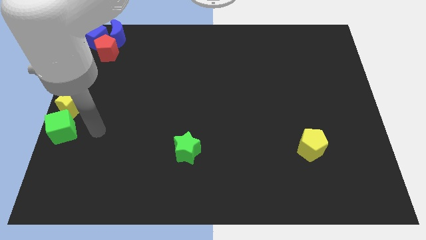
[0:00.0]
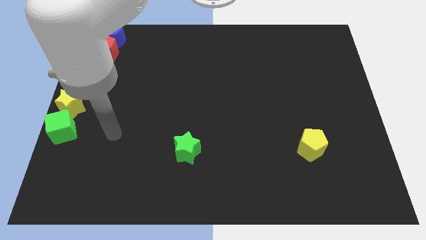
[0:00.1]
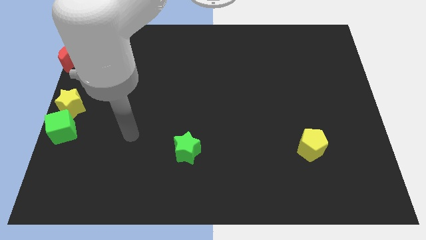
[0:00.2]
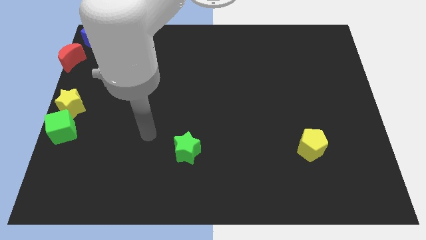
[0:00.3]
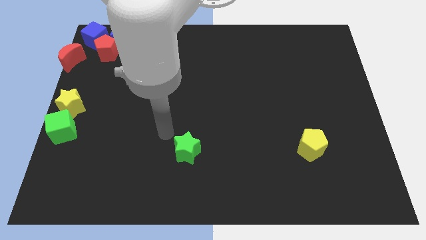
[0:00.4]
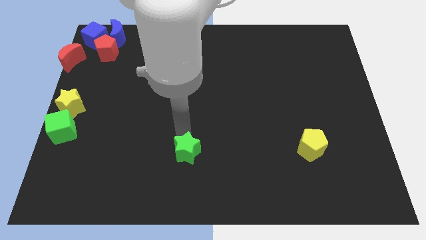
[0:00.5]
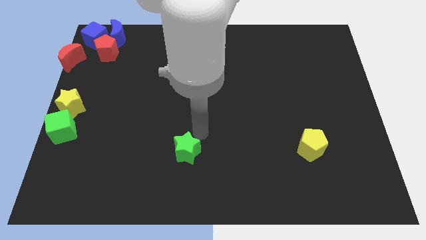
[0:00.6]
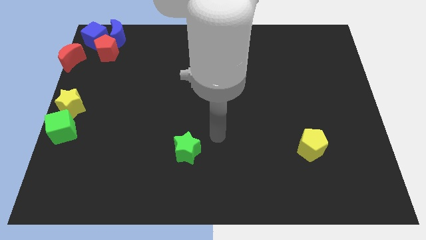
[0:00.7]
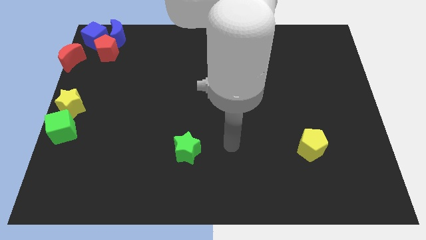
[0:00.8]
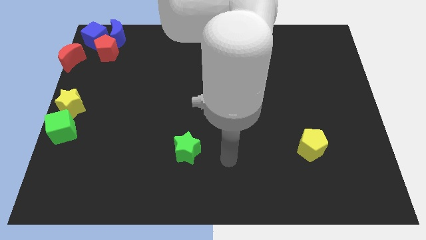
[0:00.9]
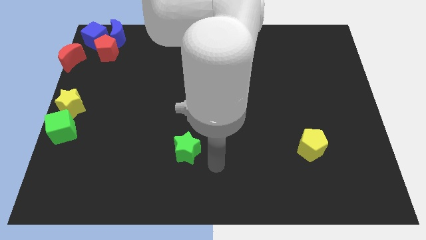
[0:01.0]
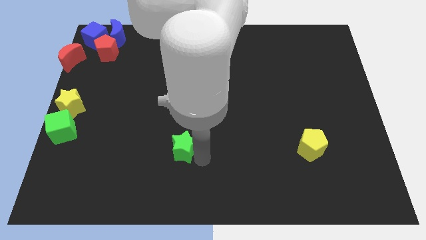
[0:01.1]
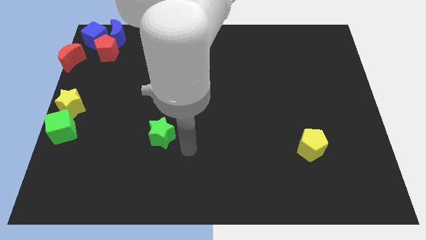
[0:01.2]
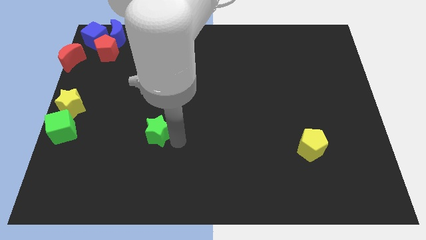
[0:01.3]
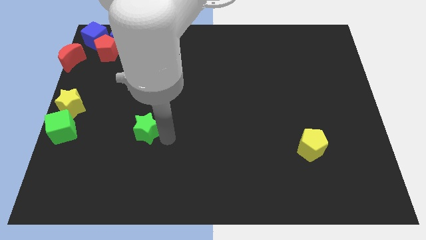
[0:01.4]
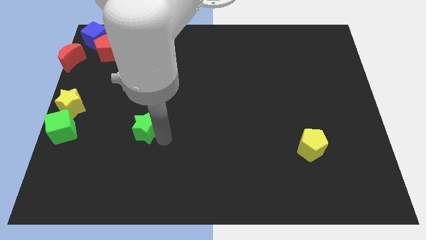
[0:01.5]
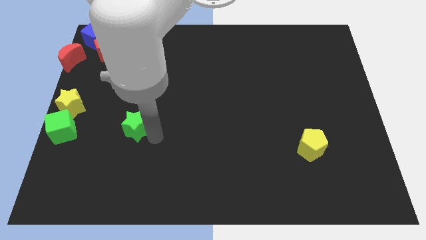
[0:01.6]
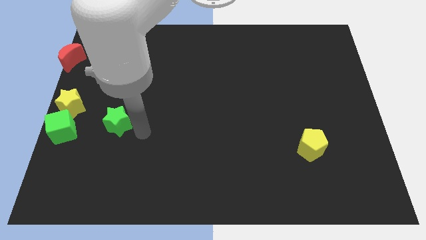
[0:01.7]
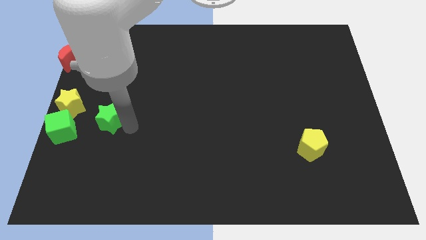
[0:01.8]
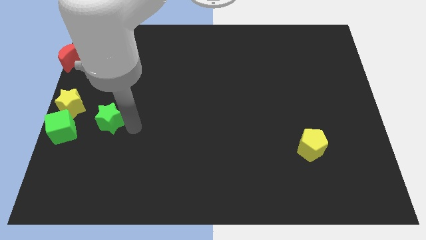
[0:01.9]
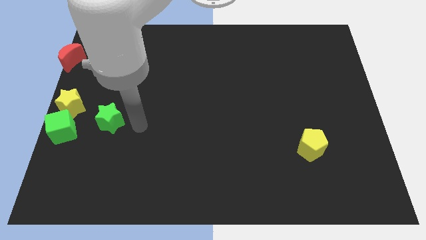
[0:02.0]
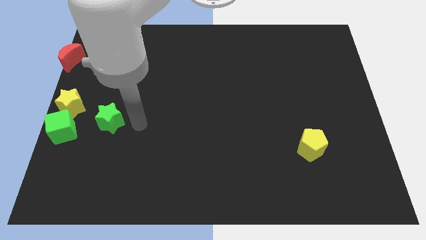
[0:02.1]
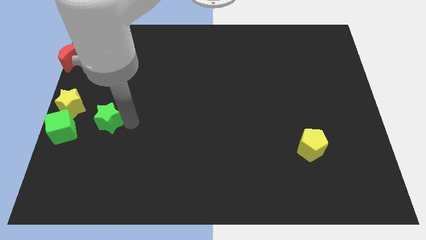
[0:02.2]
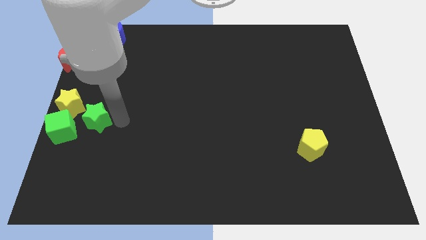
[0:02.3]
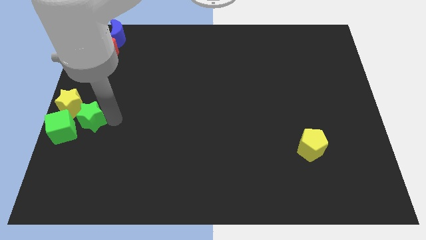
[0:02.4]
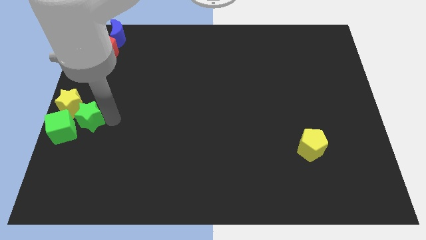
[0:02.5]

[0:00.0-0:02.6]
place green star beside green cube

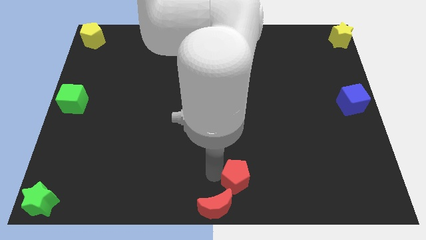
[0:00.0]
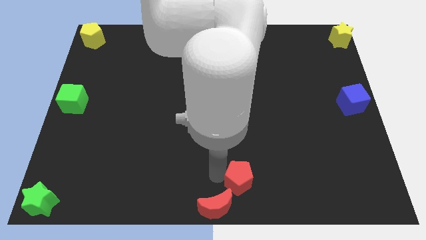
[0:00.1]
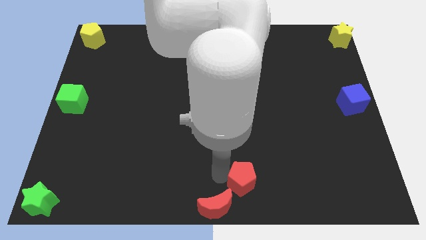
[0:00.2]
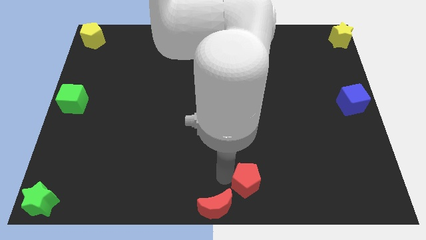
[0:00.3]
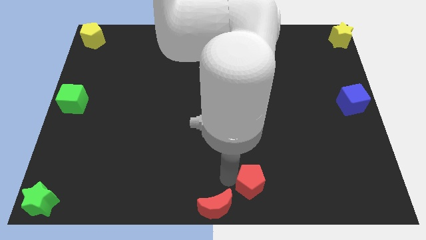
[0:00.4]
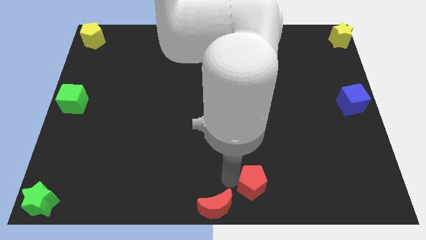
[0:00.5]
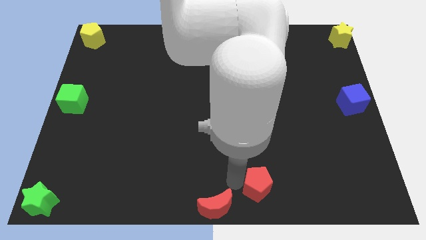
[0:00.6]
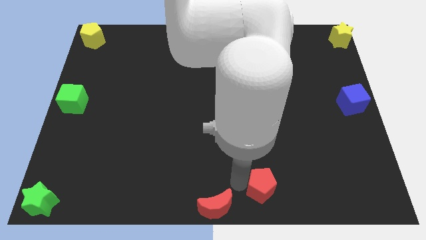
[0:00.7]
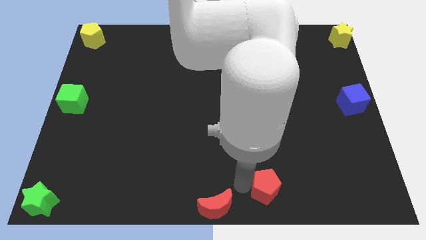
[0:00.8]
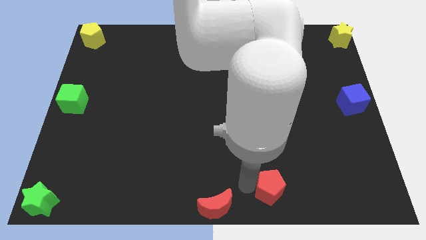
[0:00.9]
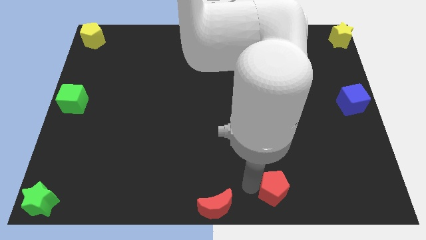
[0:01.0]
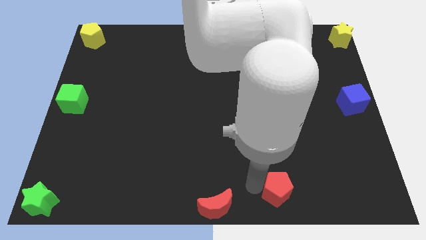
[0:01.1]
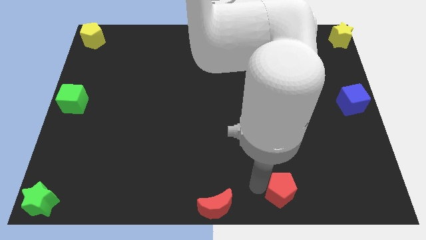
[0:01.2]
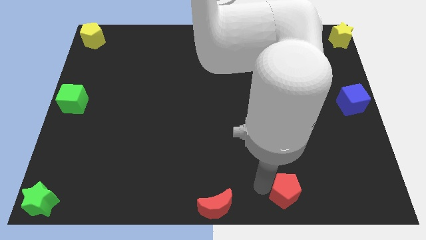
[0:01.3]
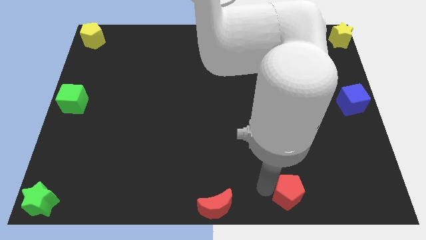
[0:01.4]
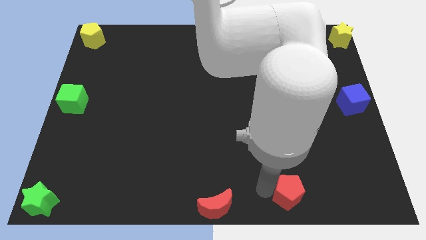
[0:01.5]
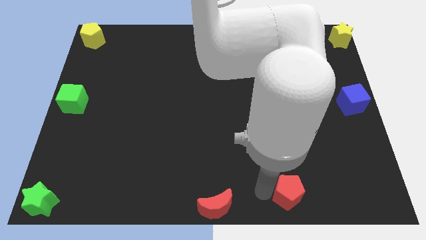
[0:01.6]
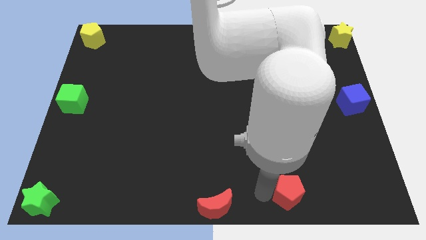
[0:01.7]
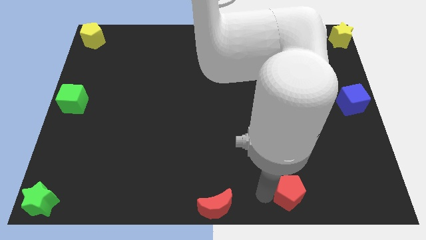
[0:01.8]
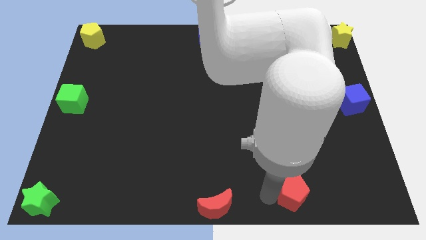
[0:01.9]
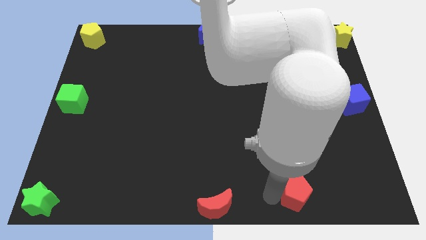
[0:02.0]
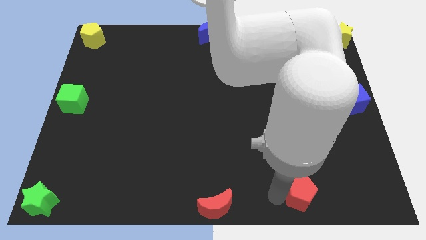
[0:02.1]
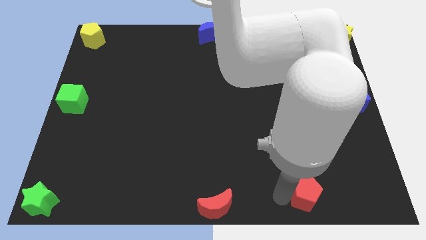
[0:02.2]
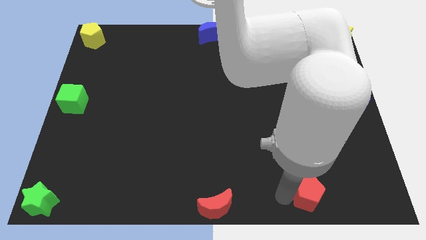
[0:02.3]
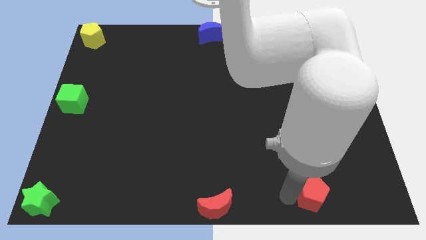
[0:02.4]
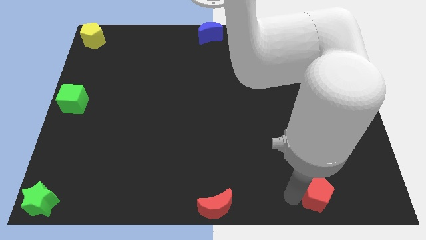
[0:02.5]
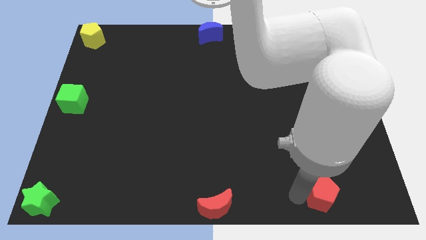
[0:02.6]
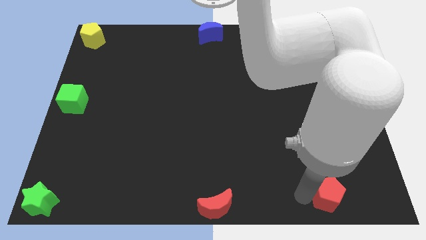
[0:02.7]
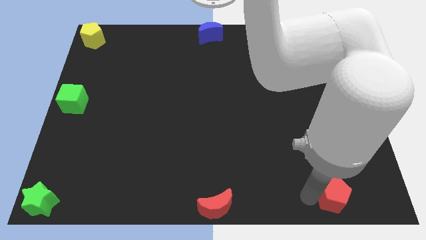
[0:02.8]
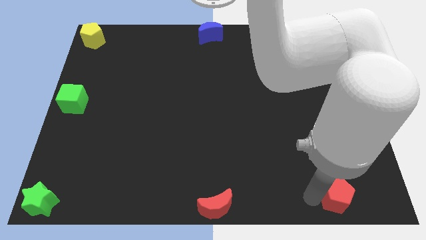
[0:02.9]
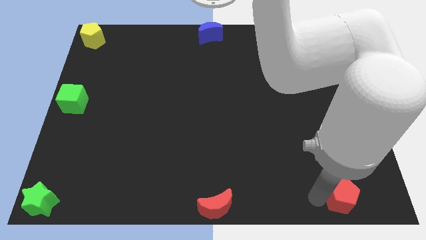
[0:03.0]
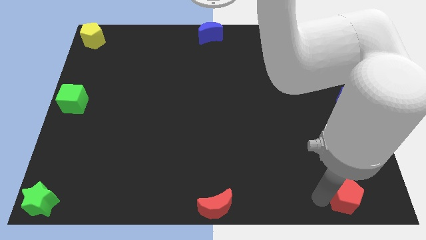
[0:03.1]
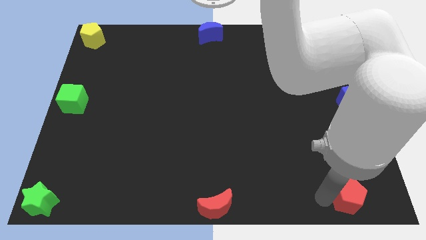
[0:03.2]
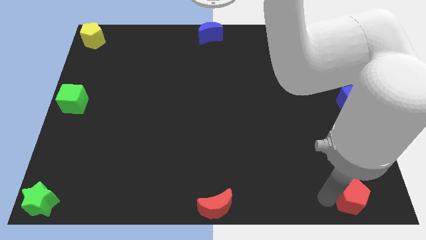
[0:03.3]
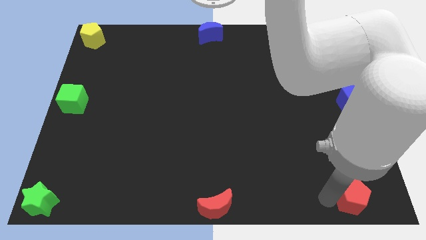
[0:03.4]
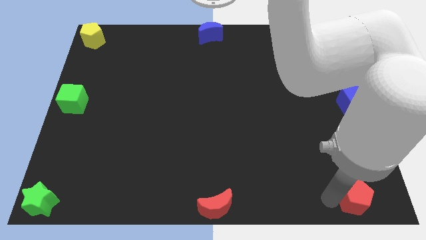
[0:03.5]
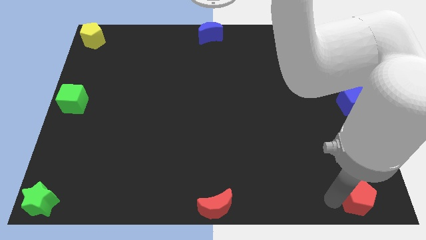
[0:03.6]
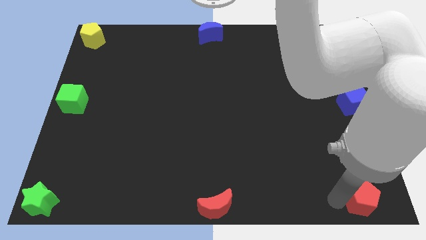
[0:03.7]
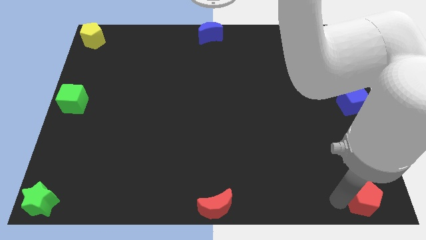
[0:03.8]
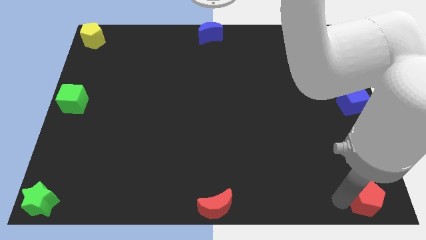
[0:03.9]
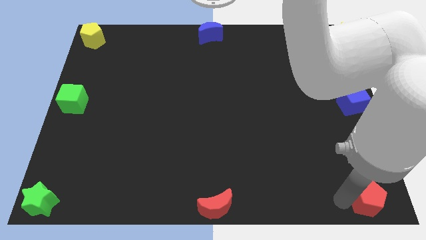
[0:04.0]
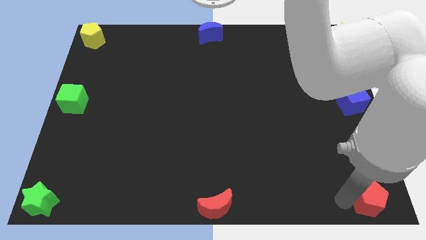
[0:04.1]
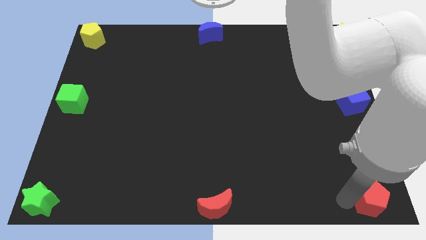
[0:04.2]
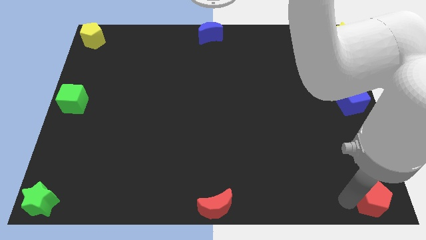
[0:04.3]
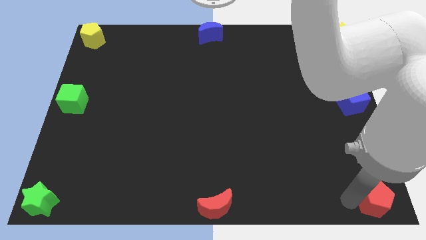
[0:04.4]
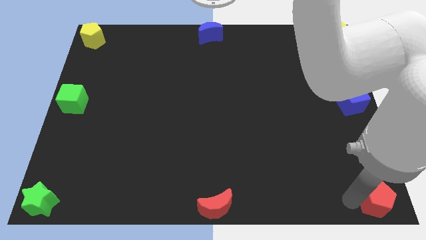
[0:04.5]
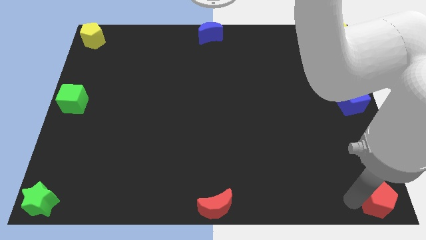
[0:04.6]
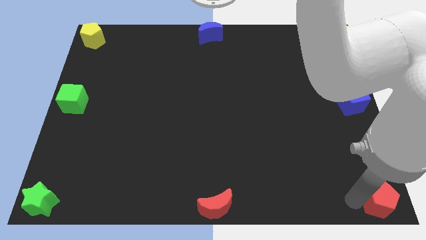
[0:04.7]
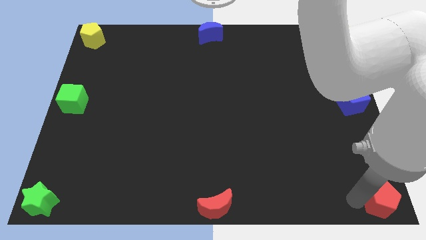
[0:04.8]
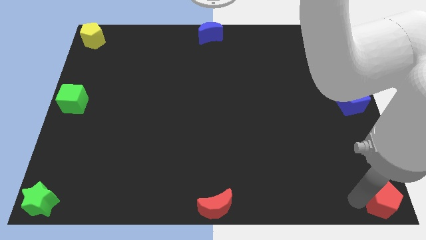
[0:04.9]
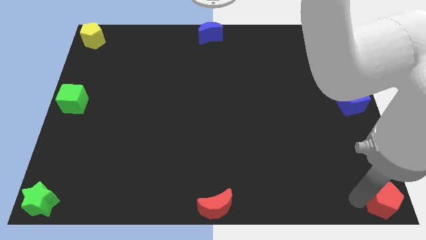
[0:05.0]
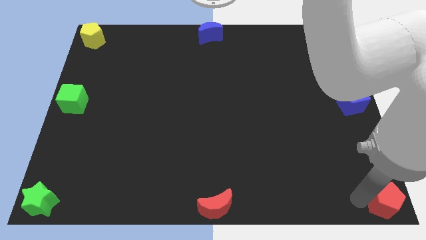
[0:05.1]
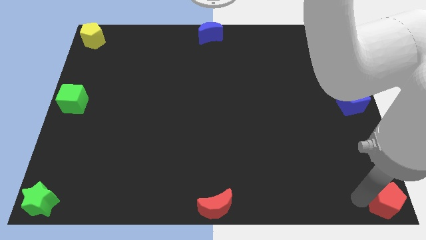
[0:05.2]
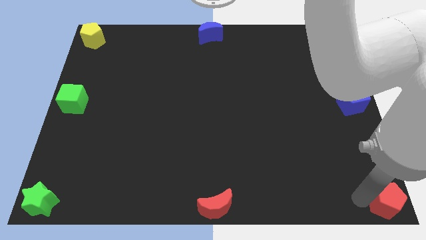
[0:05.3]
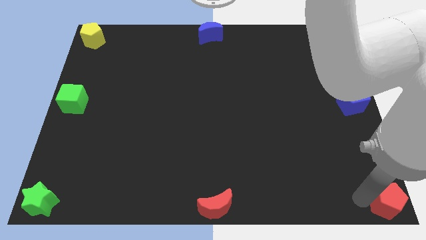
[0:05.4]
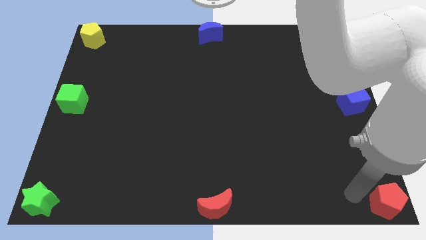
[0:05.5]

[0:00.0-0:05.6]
move the red pentagon to the bottom right of the board

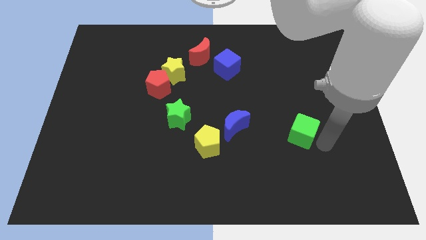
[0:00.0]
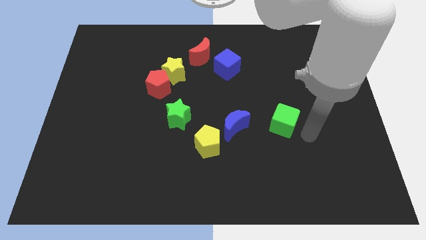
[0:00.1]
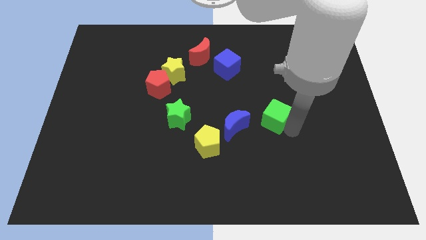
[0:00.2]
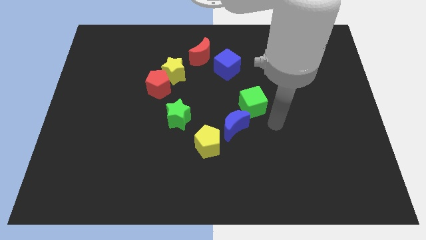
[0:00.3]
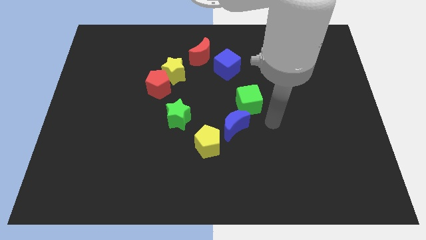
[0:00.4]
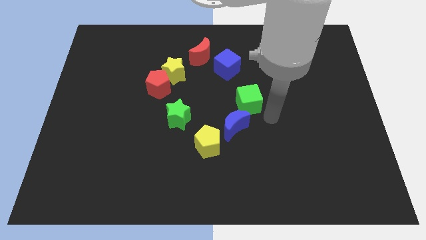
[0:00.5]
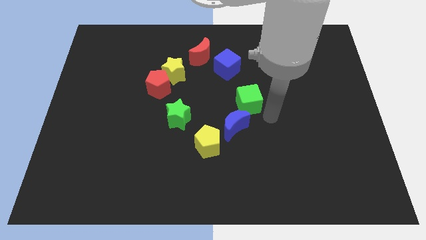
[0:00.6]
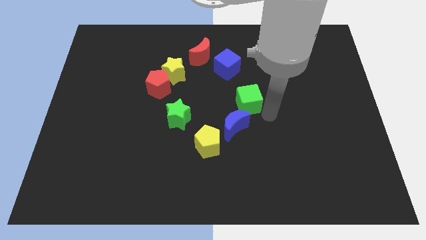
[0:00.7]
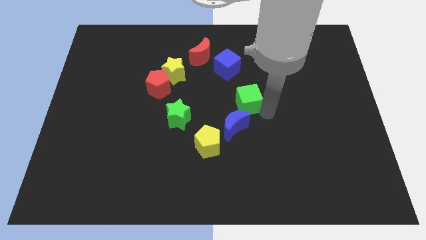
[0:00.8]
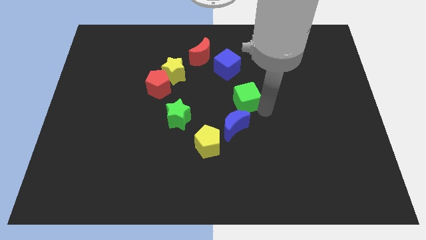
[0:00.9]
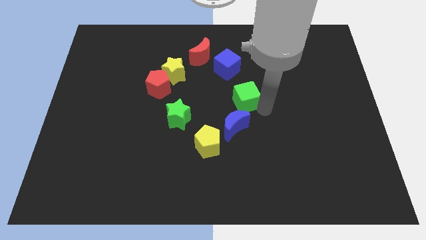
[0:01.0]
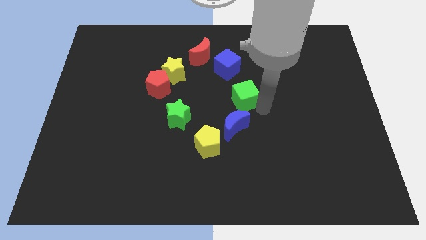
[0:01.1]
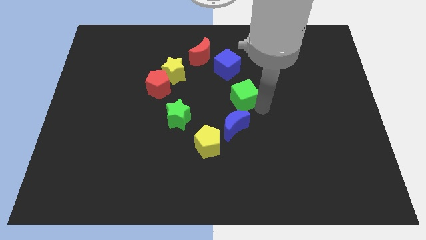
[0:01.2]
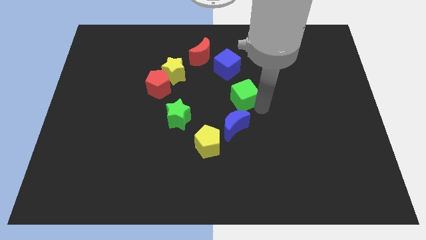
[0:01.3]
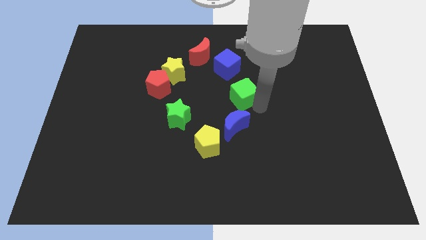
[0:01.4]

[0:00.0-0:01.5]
place the green cube in between the blue cube and the blue crescent
